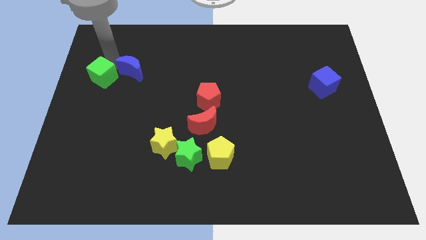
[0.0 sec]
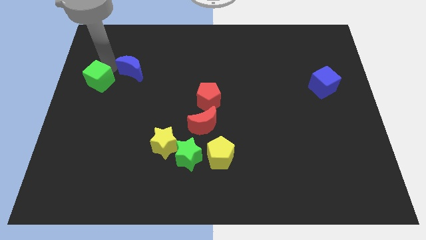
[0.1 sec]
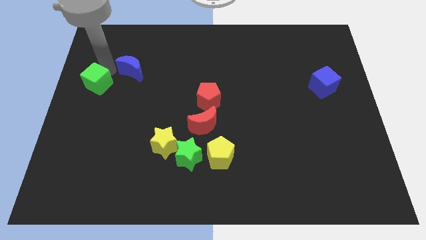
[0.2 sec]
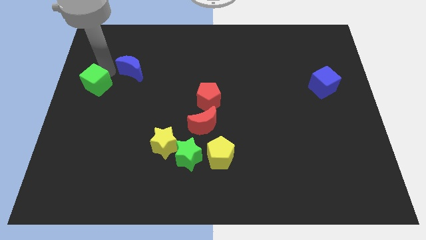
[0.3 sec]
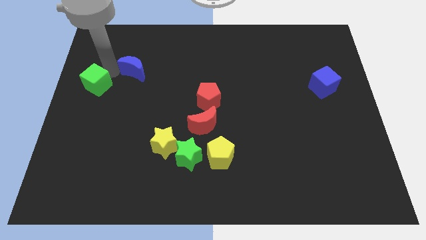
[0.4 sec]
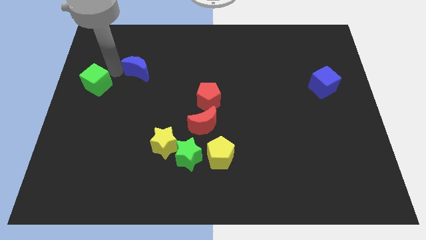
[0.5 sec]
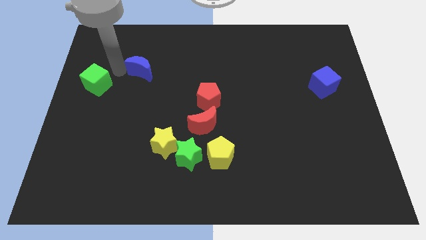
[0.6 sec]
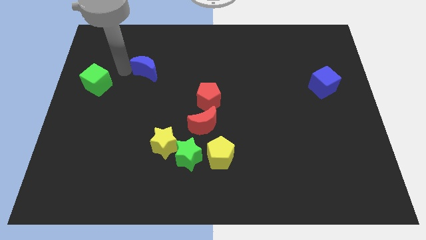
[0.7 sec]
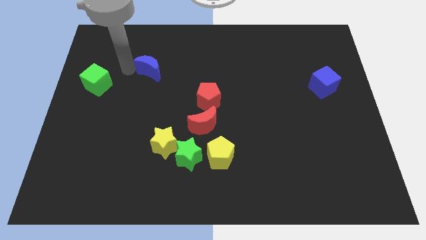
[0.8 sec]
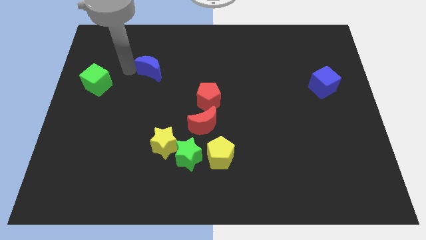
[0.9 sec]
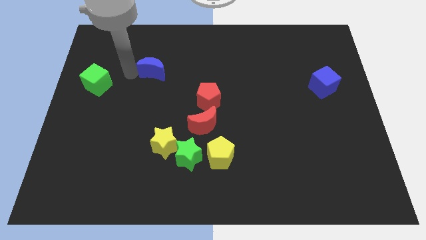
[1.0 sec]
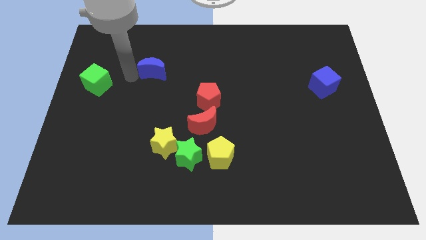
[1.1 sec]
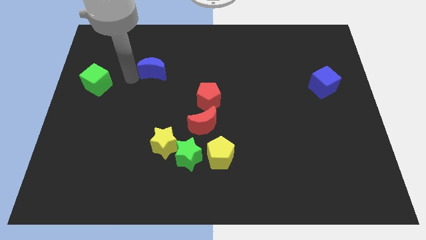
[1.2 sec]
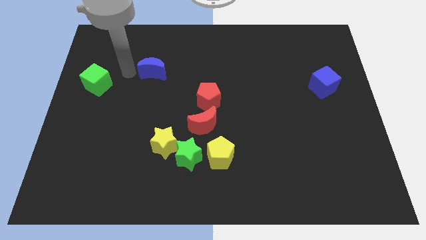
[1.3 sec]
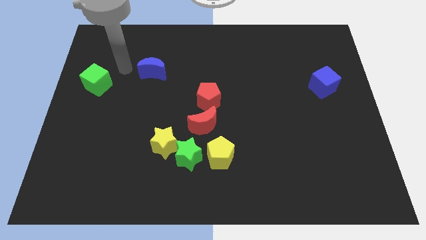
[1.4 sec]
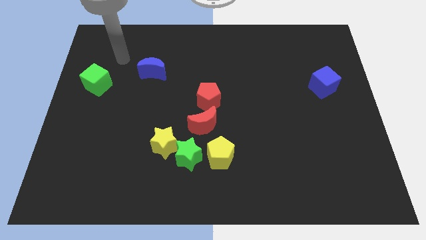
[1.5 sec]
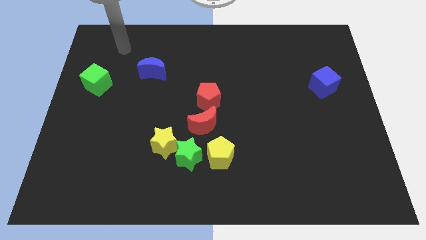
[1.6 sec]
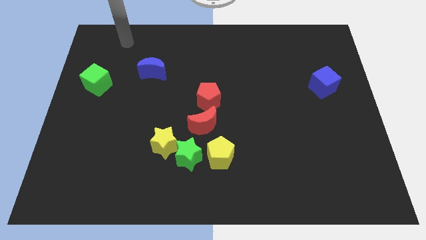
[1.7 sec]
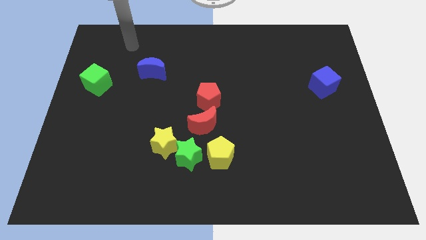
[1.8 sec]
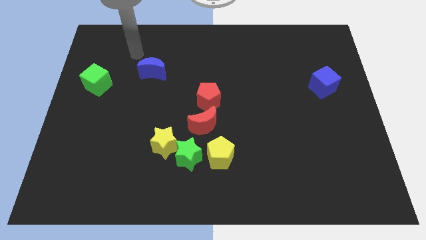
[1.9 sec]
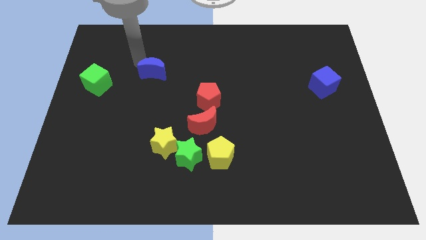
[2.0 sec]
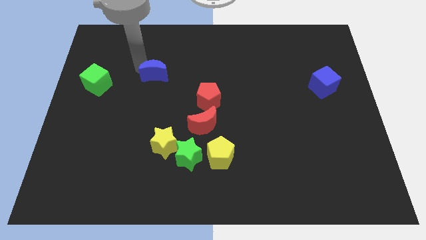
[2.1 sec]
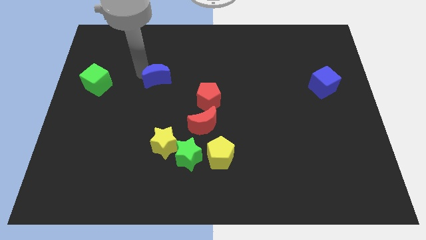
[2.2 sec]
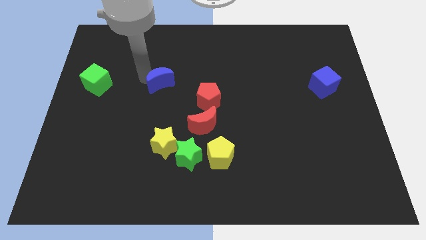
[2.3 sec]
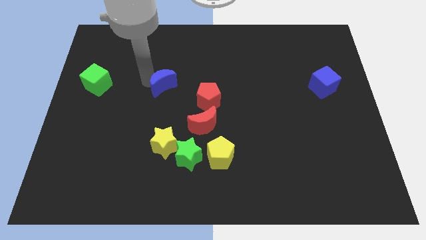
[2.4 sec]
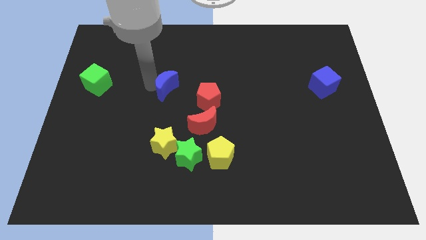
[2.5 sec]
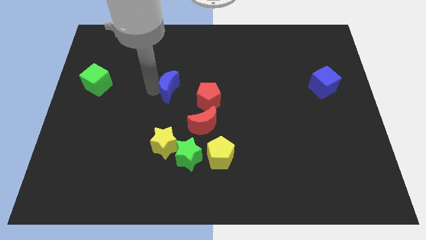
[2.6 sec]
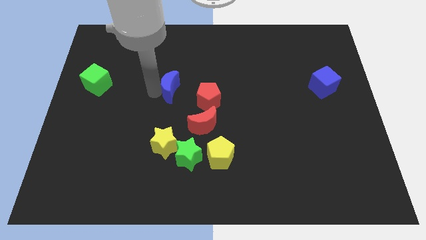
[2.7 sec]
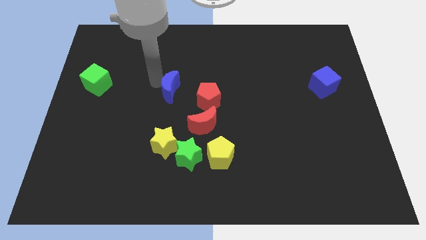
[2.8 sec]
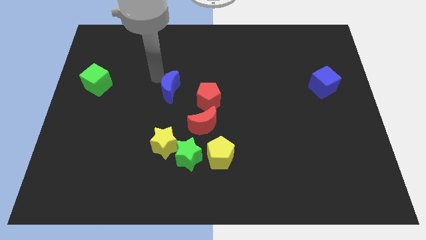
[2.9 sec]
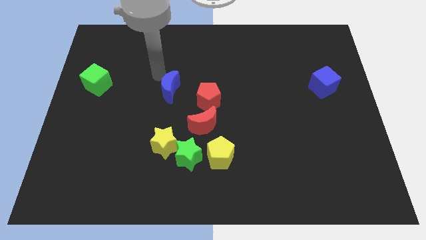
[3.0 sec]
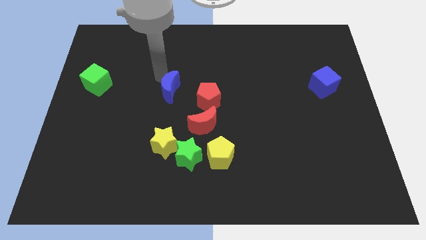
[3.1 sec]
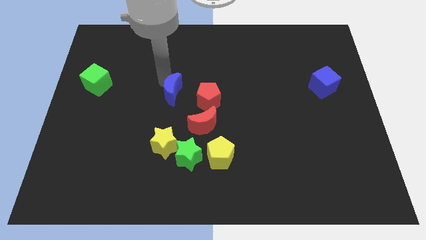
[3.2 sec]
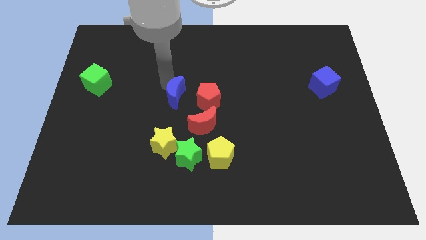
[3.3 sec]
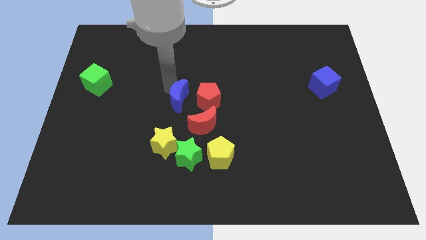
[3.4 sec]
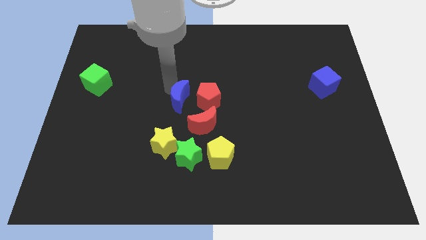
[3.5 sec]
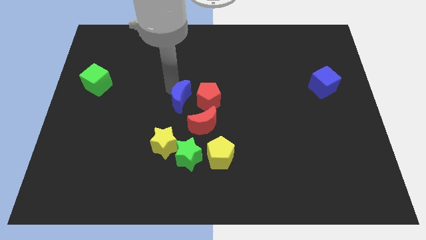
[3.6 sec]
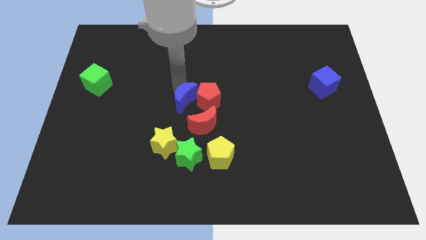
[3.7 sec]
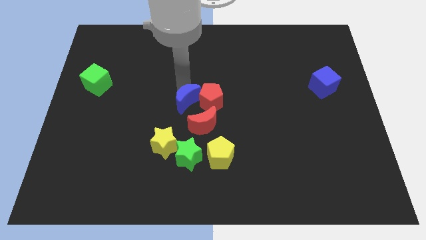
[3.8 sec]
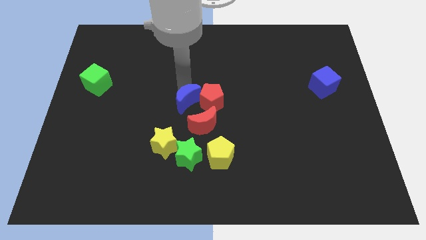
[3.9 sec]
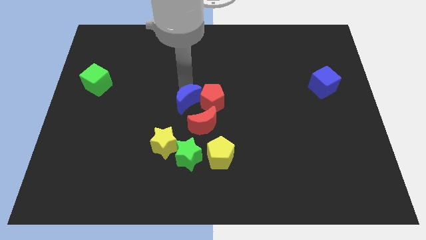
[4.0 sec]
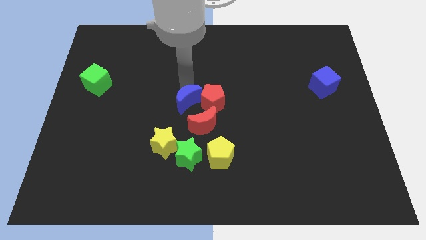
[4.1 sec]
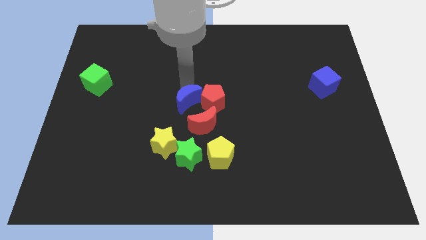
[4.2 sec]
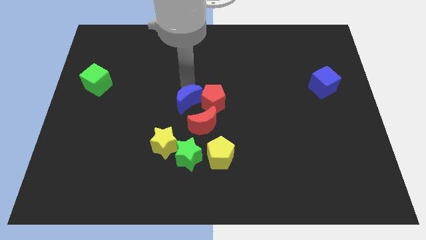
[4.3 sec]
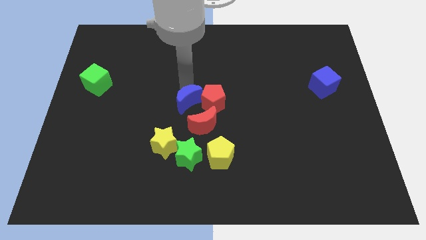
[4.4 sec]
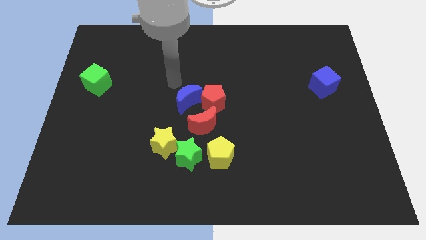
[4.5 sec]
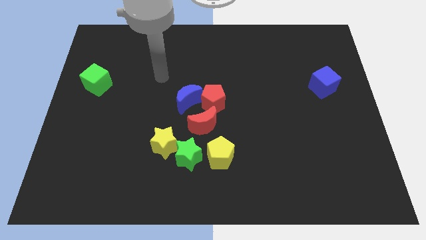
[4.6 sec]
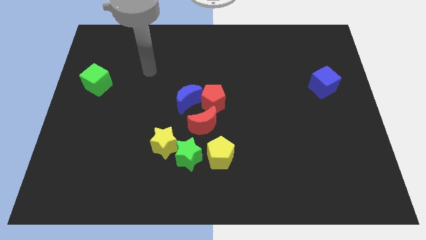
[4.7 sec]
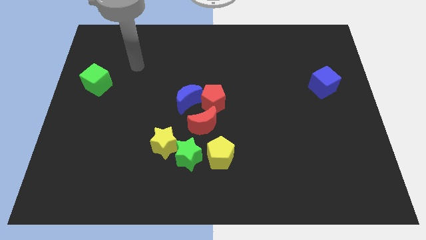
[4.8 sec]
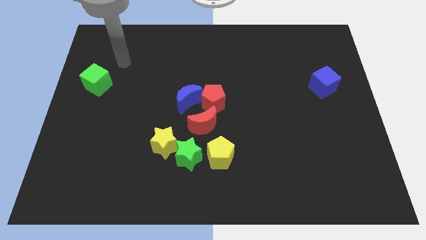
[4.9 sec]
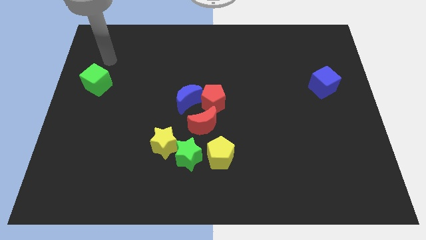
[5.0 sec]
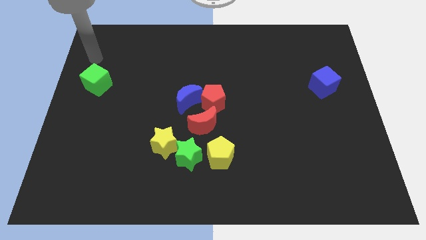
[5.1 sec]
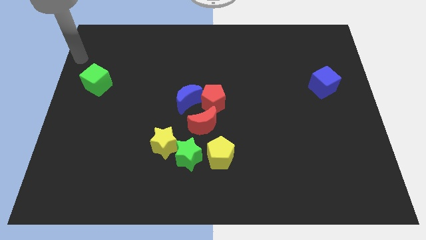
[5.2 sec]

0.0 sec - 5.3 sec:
move the blue crescent into the red pentagon

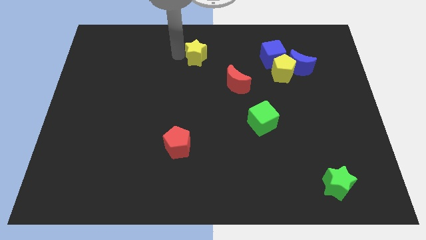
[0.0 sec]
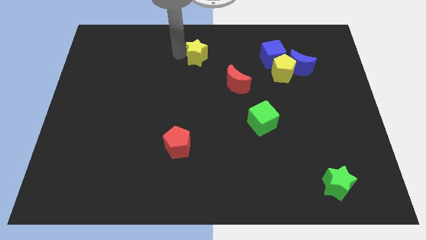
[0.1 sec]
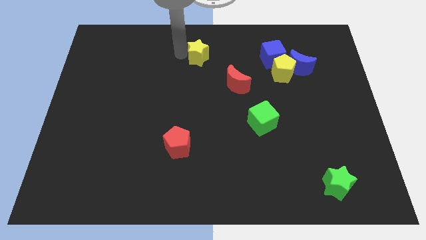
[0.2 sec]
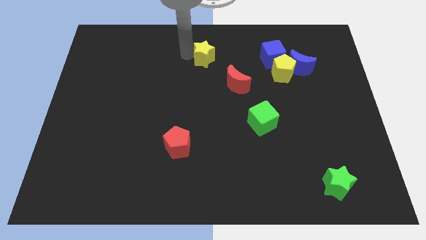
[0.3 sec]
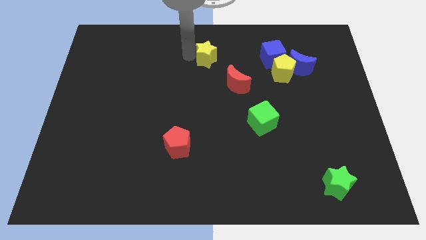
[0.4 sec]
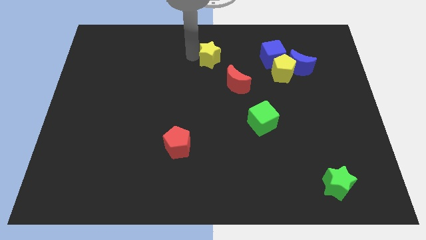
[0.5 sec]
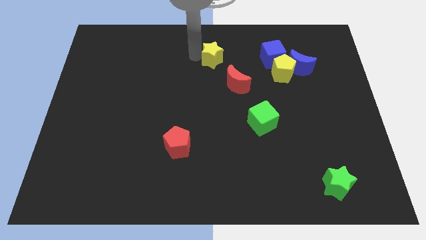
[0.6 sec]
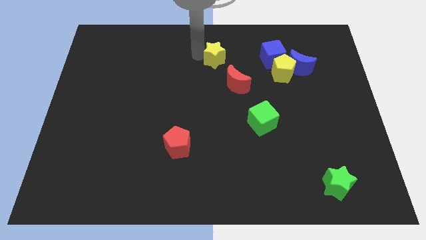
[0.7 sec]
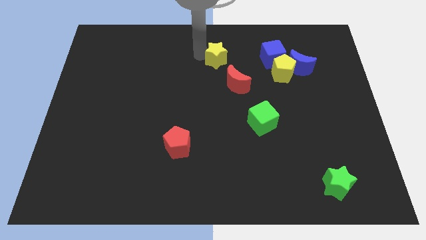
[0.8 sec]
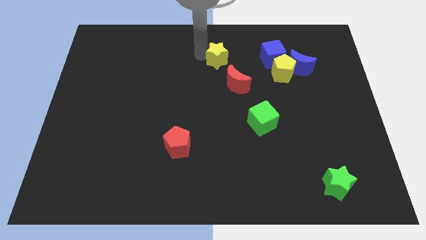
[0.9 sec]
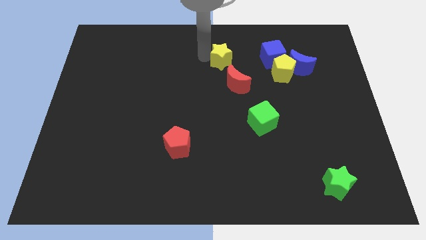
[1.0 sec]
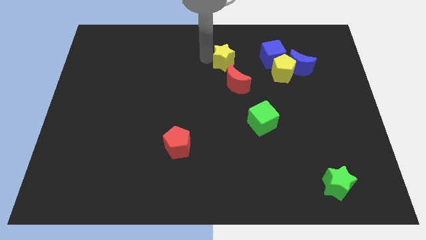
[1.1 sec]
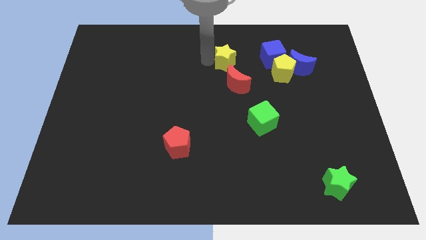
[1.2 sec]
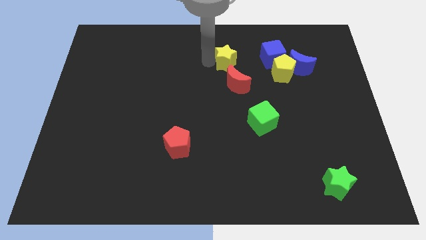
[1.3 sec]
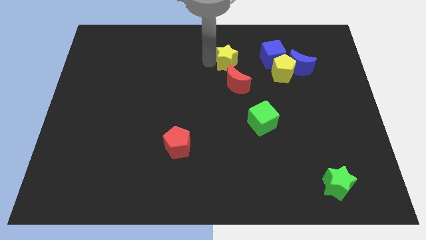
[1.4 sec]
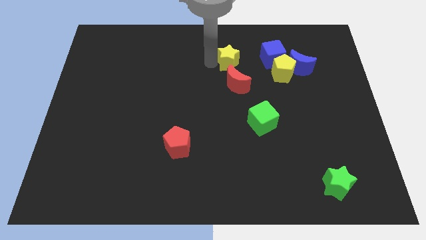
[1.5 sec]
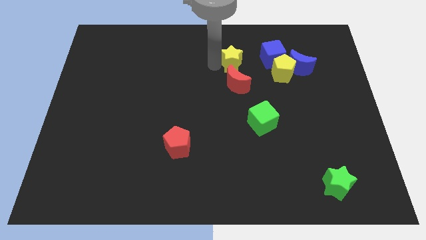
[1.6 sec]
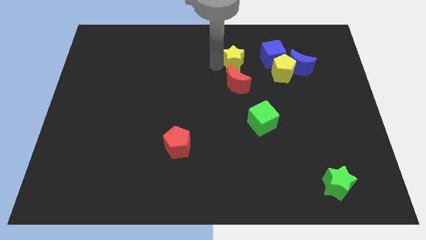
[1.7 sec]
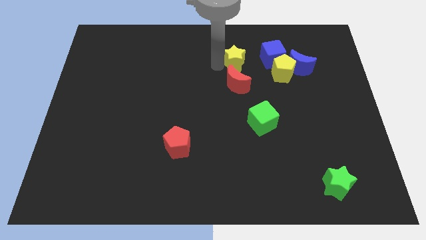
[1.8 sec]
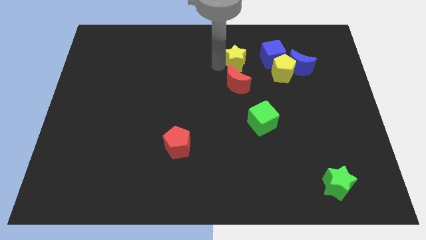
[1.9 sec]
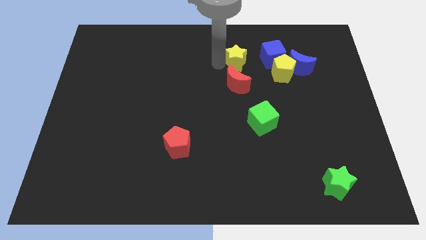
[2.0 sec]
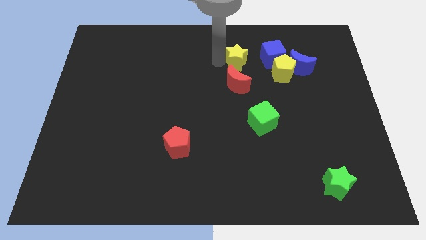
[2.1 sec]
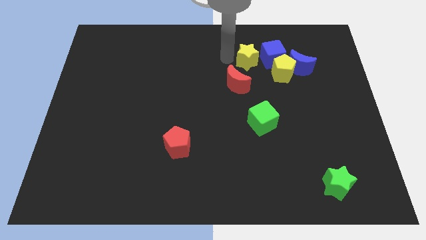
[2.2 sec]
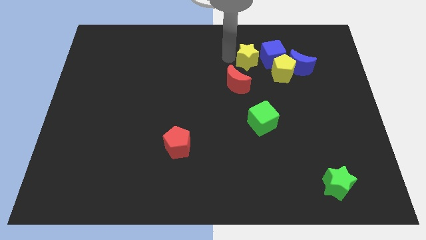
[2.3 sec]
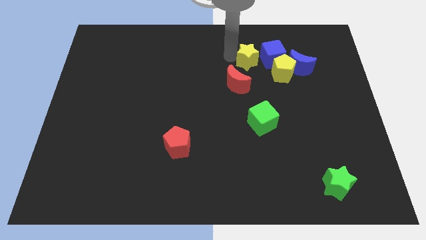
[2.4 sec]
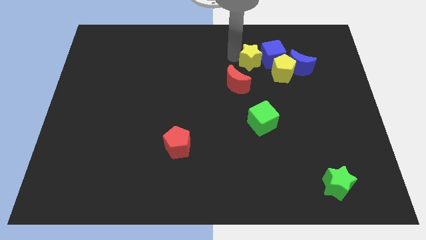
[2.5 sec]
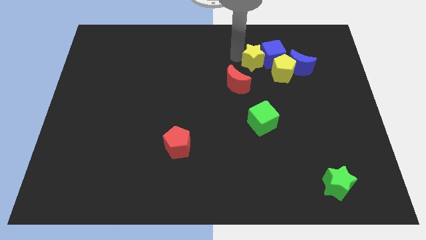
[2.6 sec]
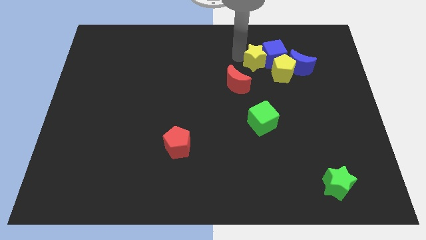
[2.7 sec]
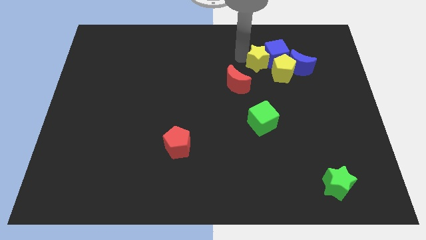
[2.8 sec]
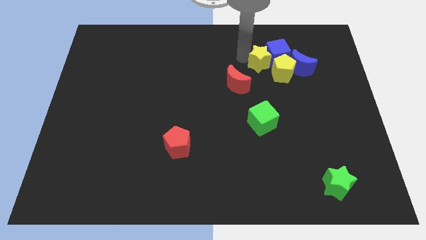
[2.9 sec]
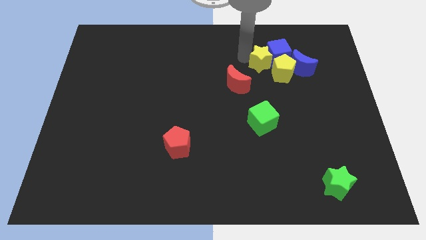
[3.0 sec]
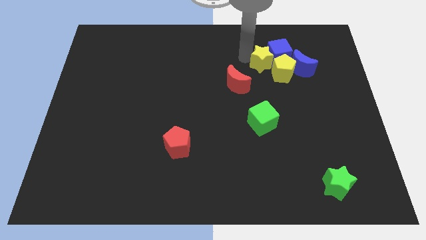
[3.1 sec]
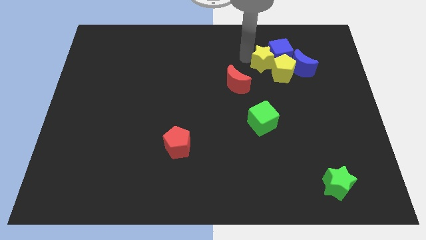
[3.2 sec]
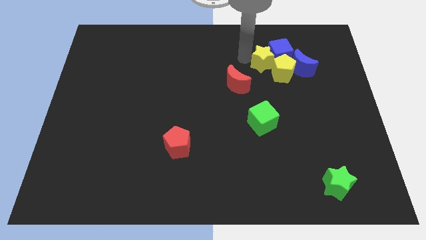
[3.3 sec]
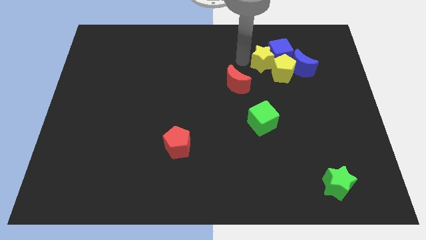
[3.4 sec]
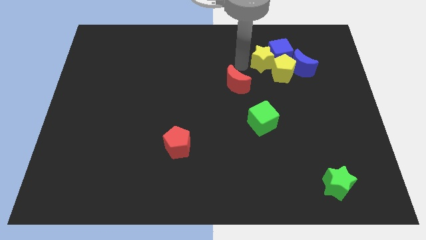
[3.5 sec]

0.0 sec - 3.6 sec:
push the yellow star into the blue cube
